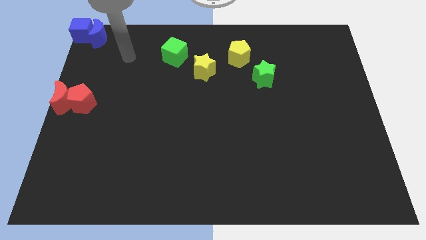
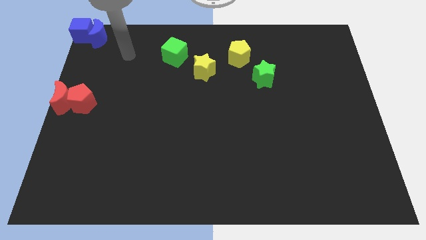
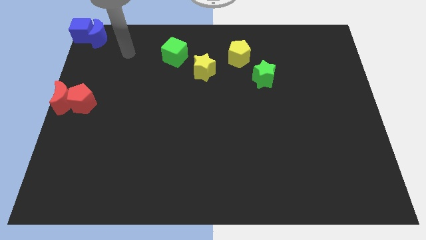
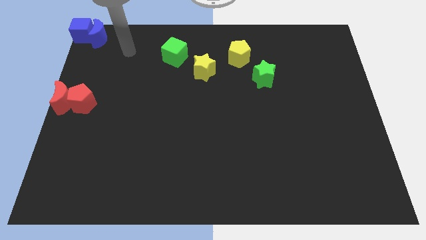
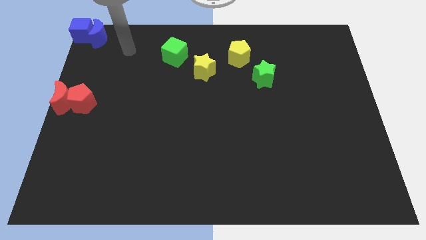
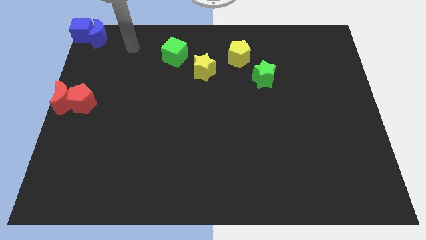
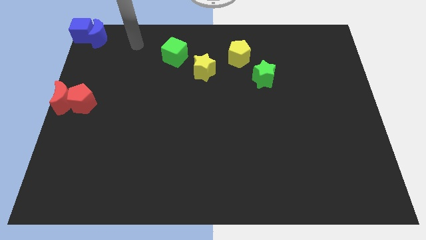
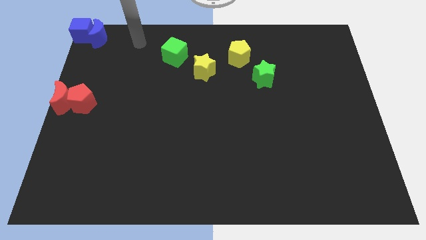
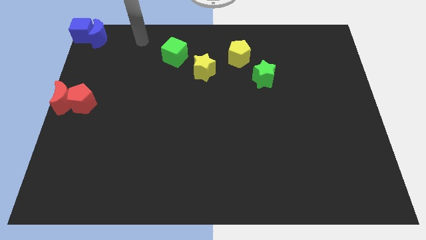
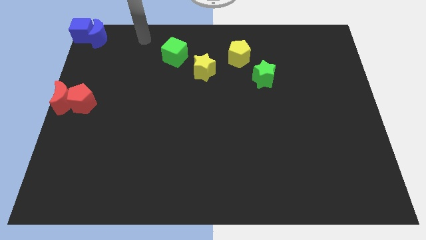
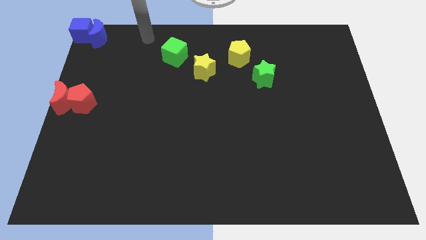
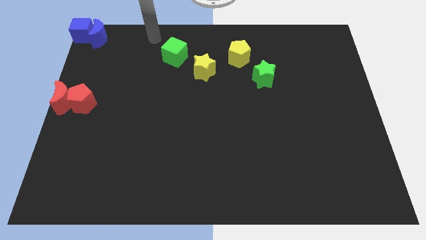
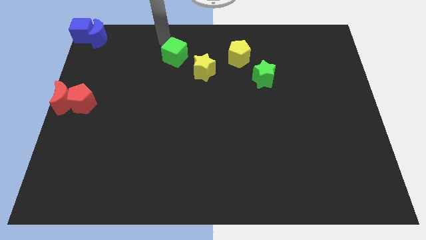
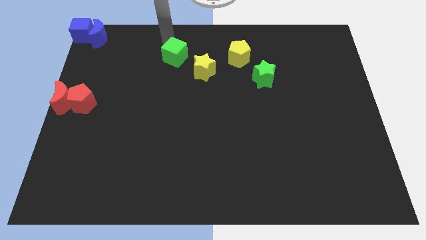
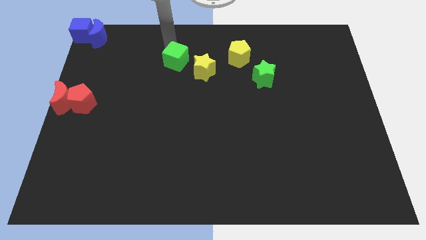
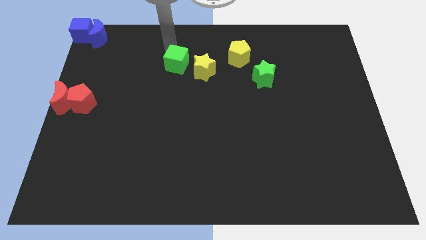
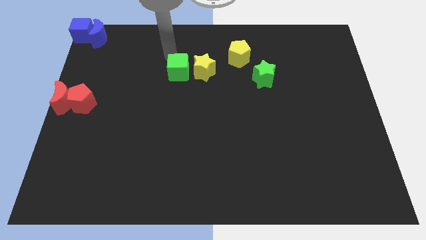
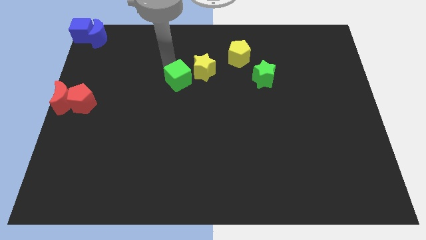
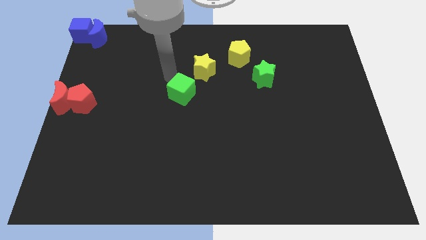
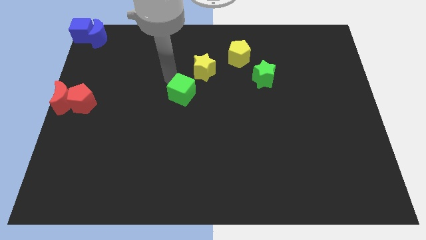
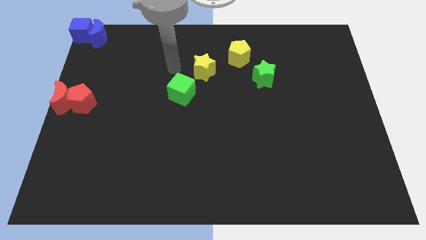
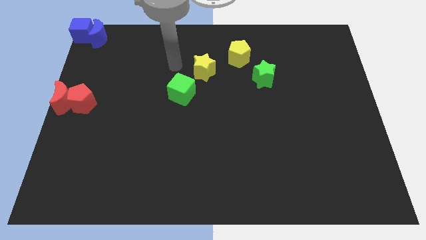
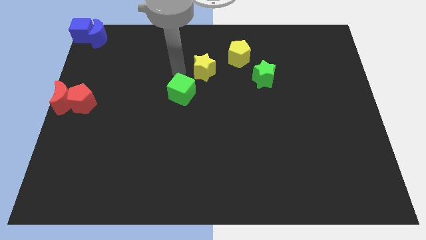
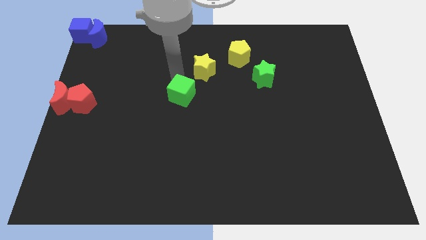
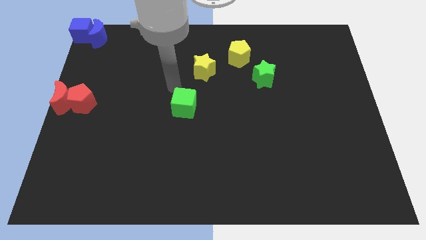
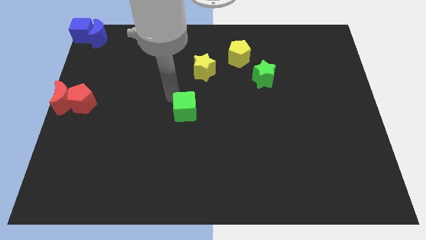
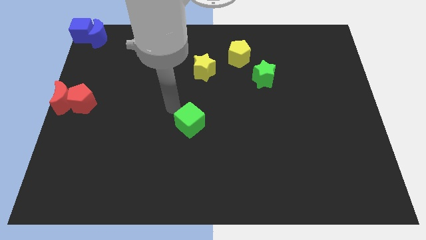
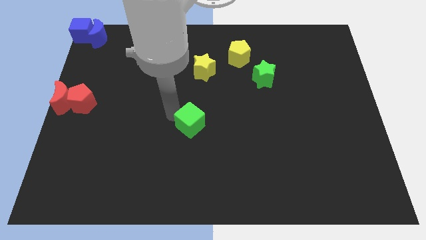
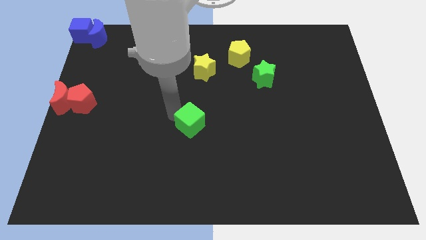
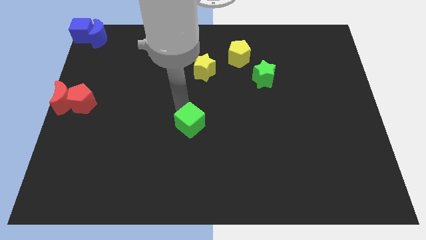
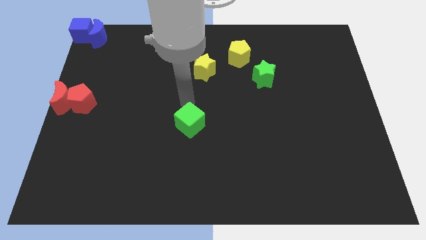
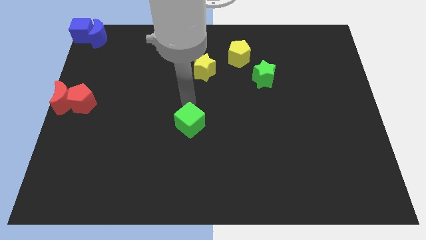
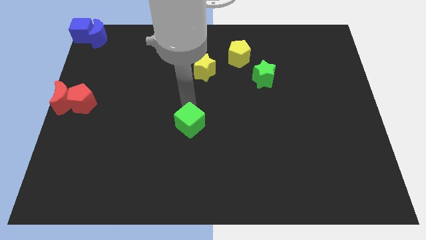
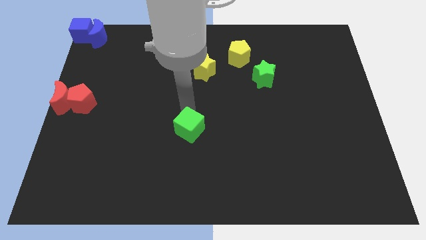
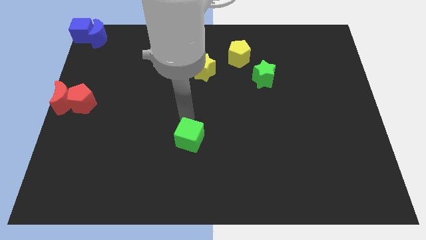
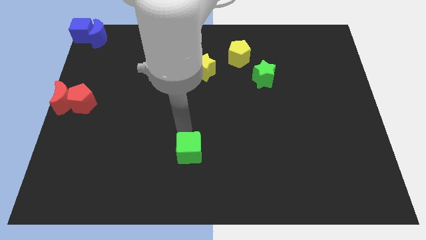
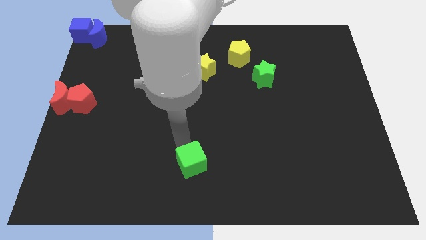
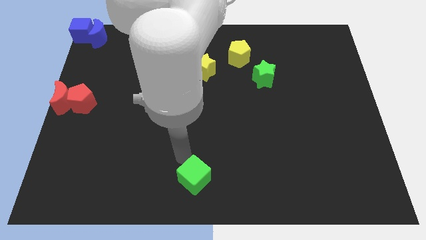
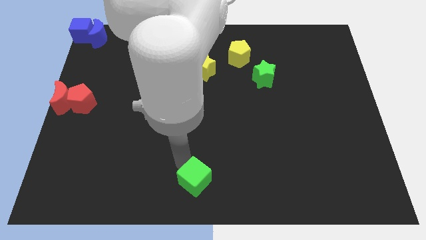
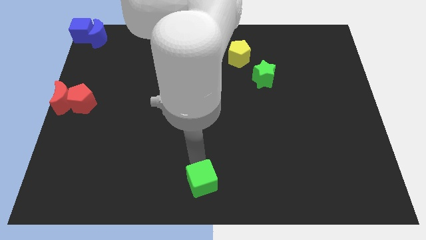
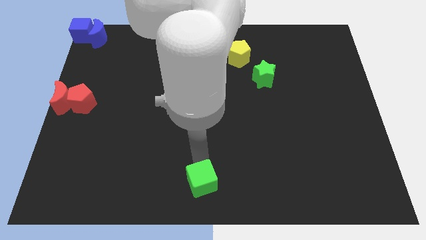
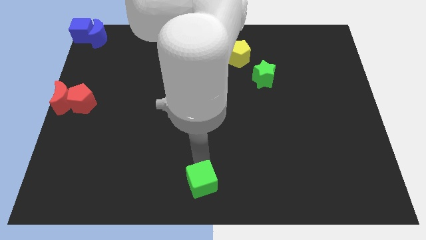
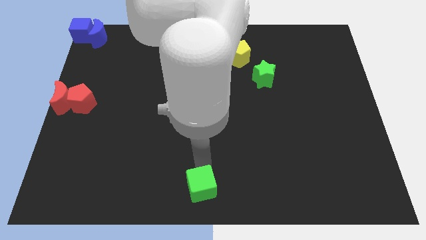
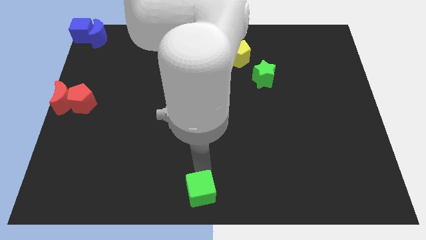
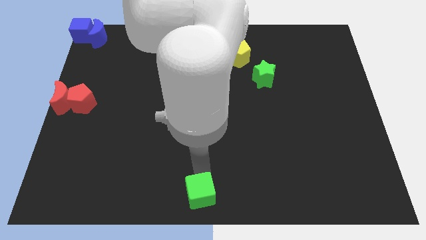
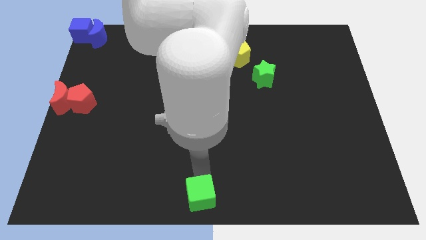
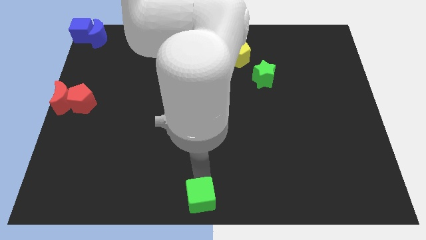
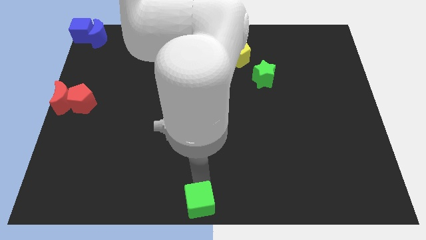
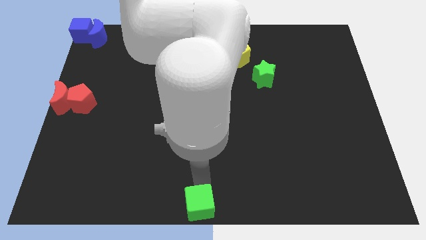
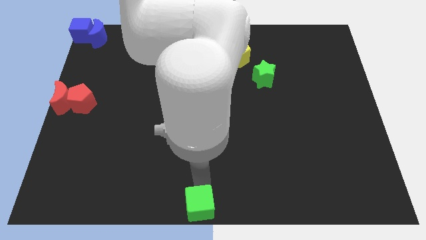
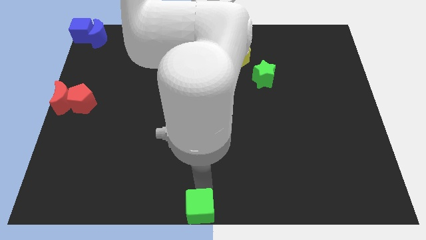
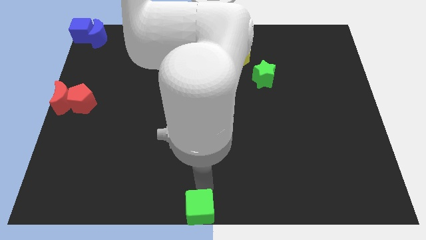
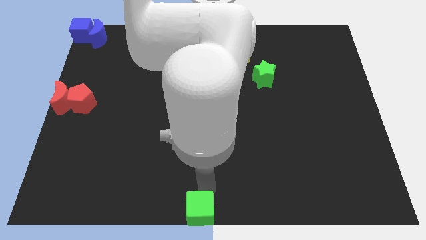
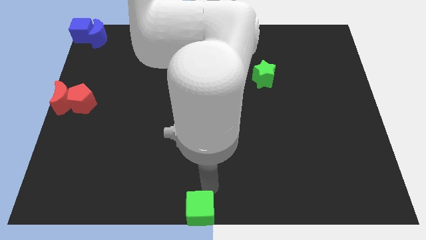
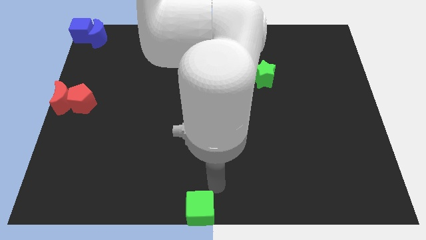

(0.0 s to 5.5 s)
place the green cube to the bottom center of the board

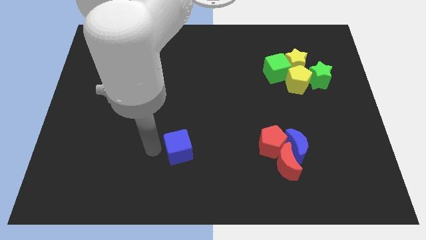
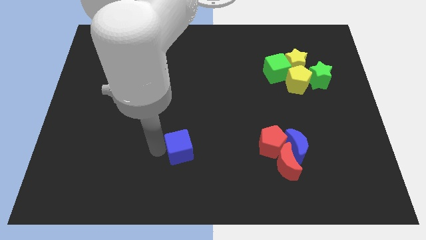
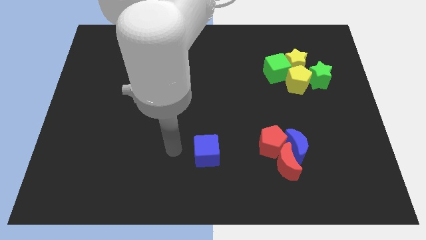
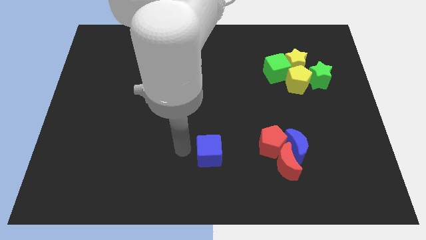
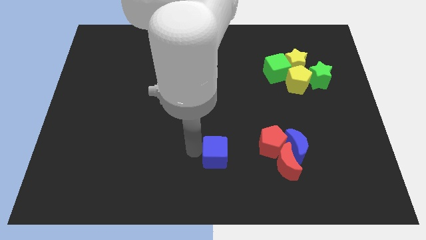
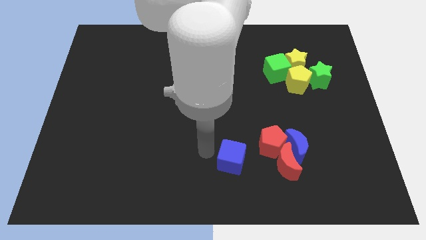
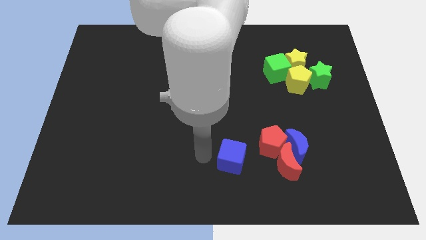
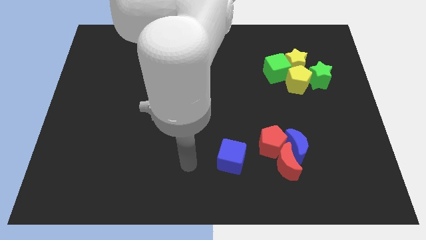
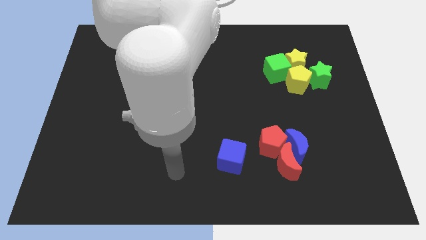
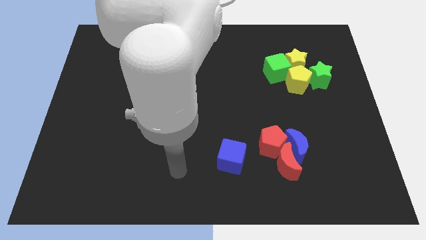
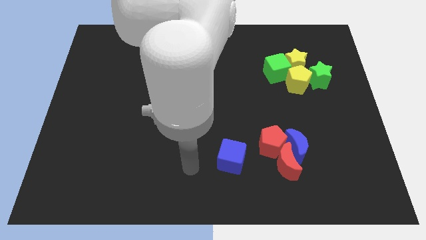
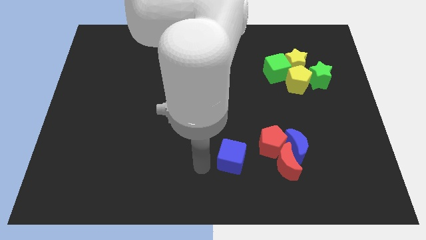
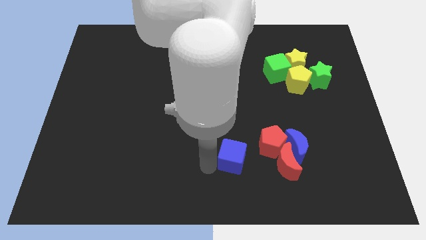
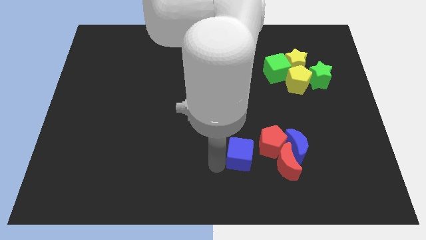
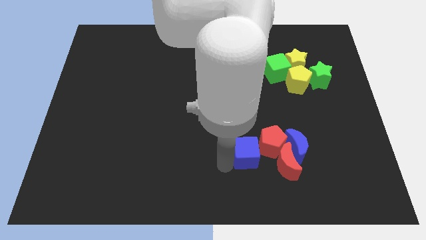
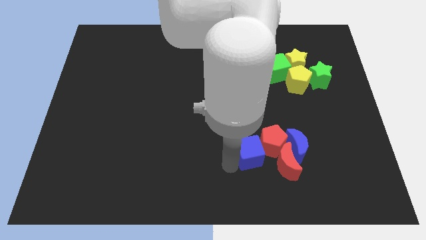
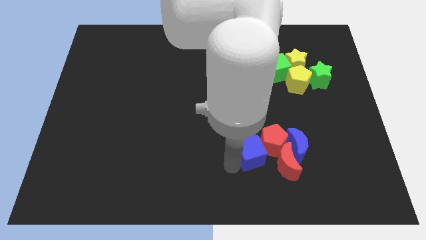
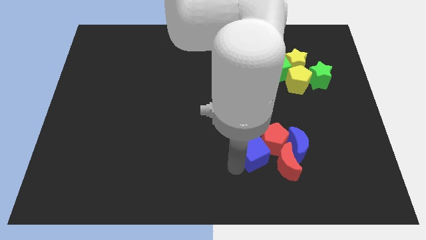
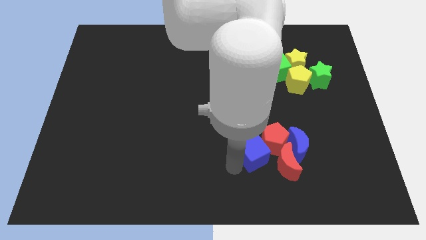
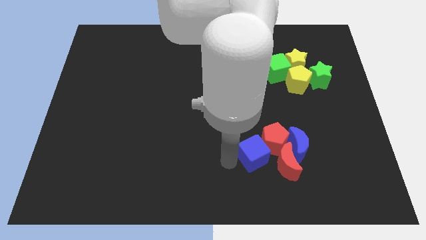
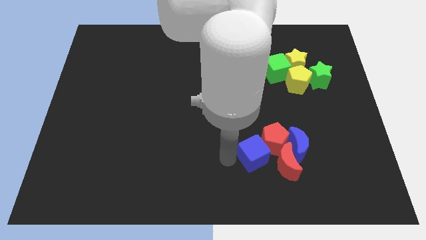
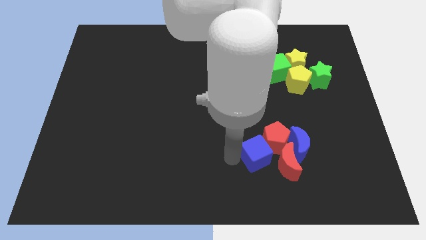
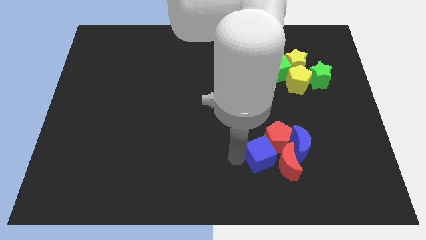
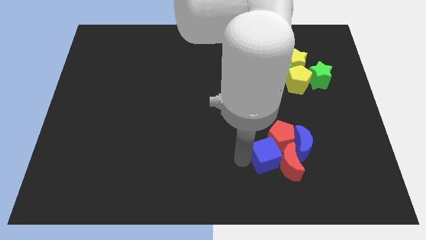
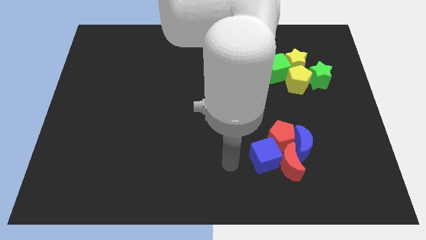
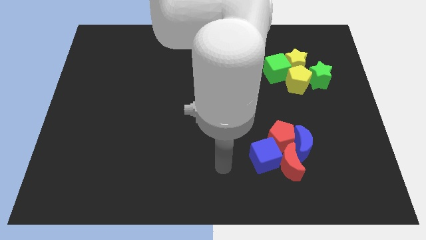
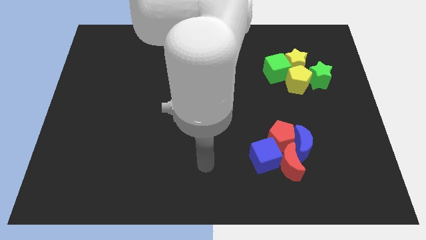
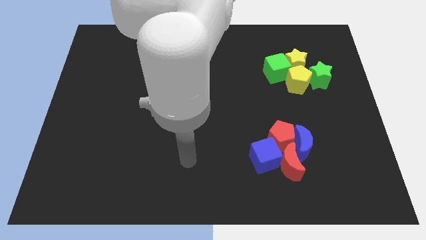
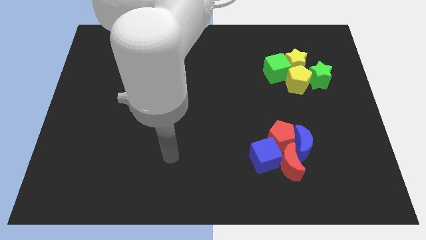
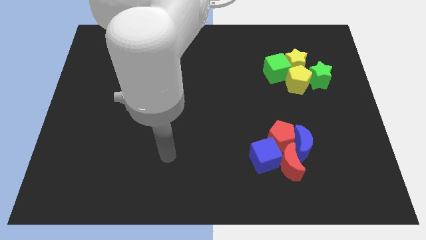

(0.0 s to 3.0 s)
move the blue cube into the group of red blocks

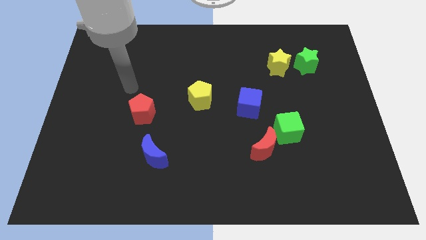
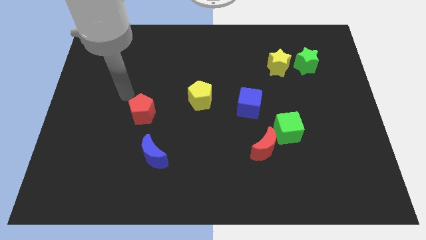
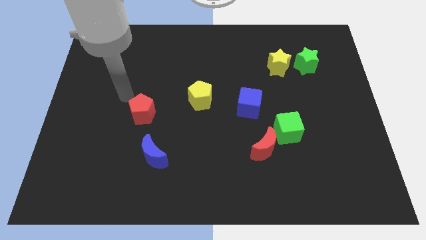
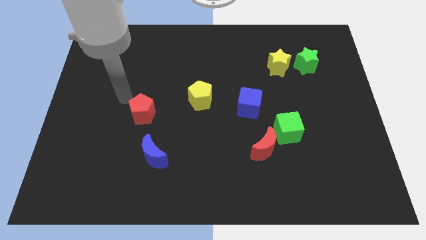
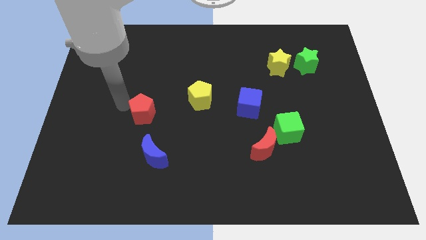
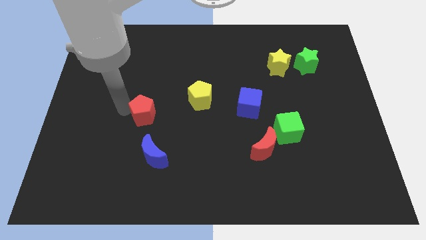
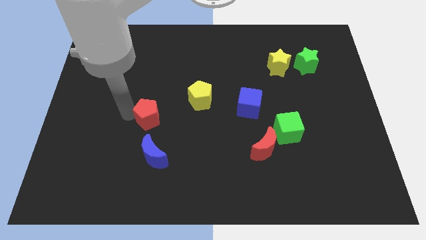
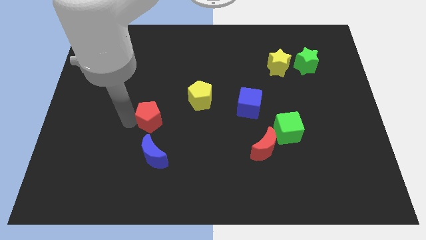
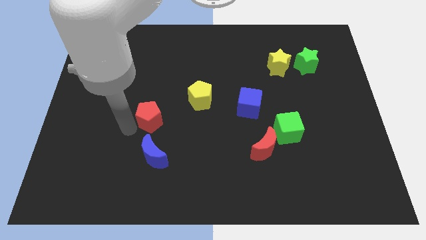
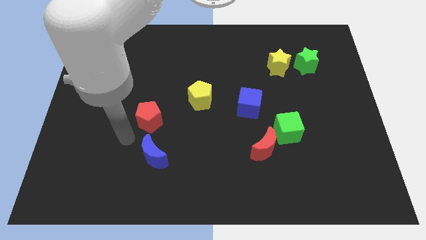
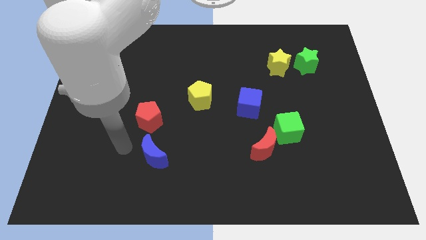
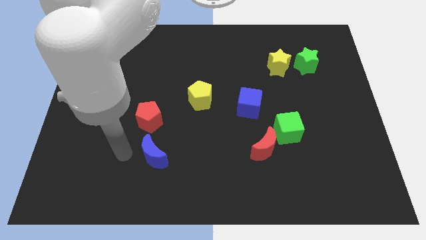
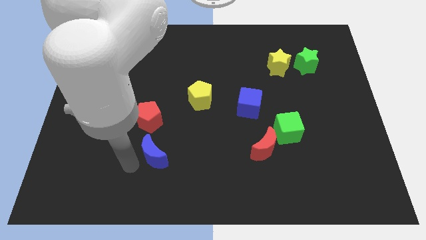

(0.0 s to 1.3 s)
touch the red pentagon
